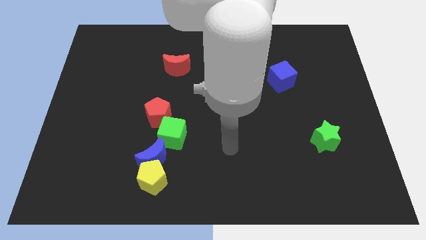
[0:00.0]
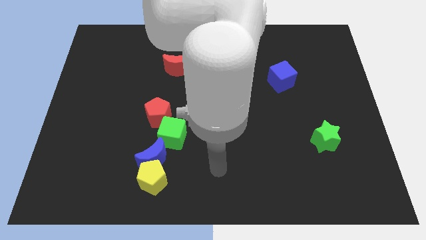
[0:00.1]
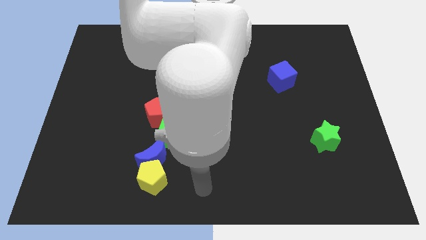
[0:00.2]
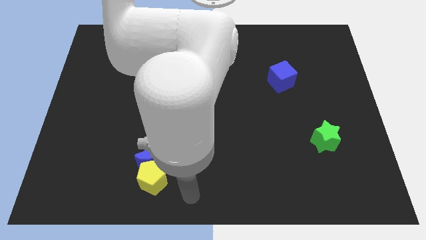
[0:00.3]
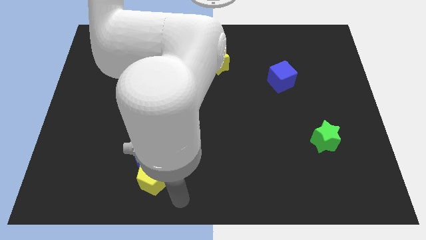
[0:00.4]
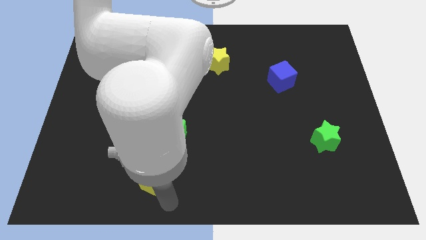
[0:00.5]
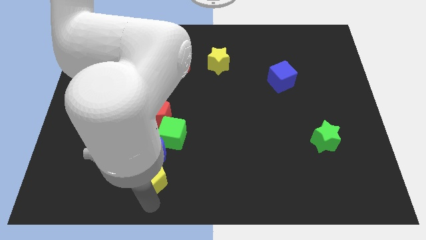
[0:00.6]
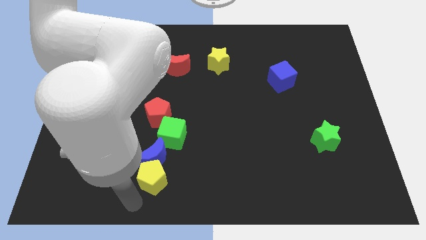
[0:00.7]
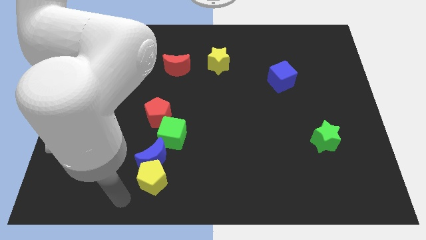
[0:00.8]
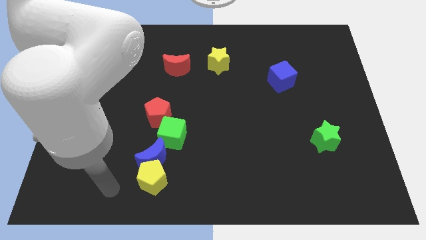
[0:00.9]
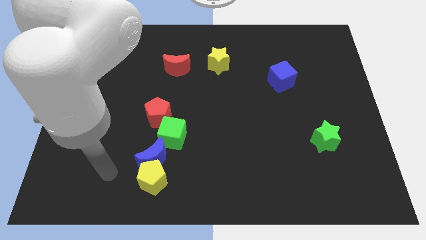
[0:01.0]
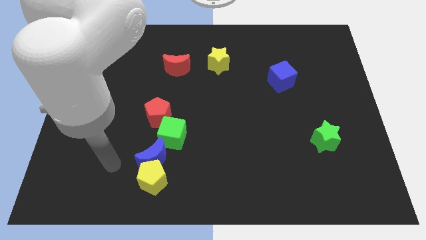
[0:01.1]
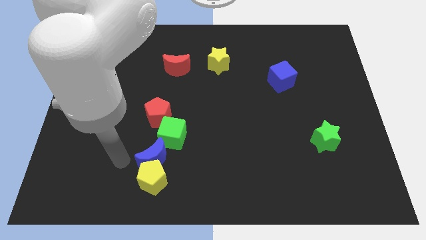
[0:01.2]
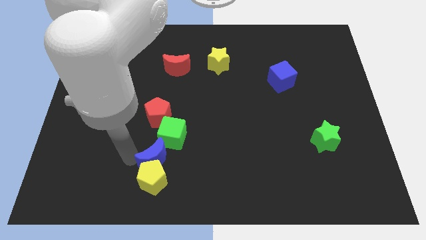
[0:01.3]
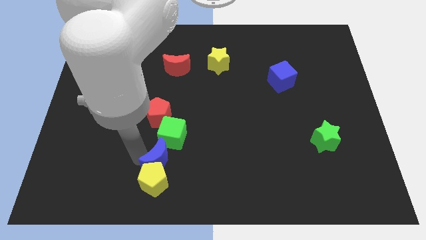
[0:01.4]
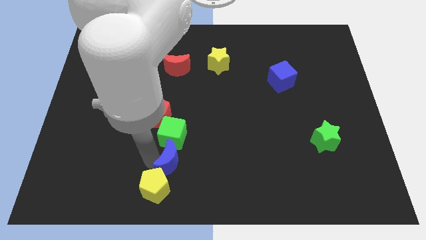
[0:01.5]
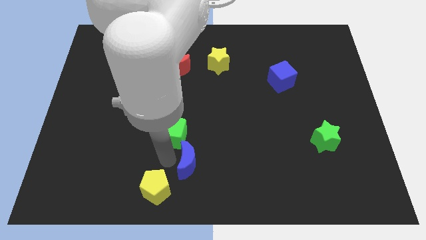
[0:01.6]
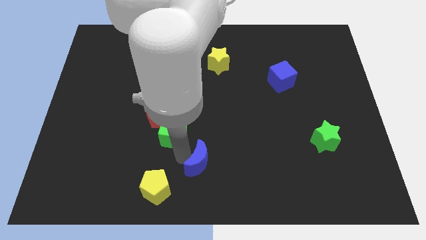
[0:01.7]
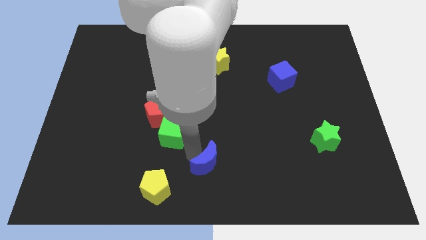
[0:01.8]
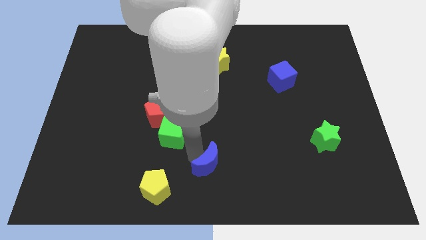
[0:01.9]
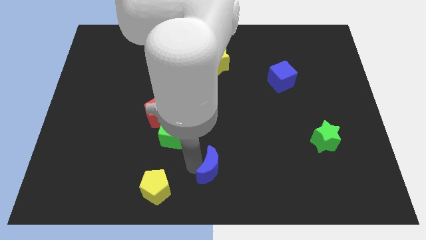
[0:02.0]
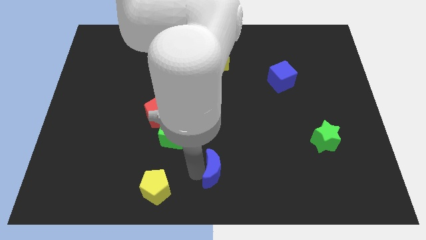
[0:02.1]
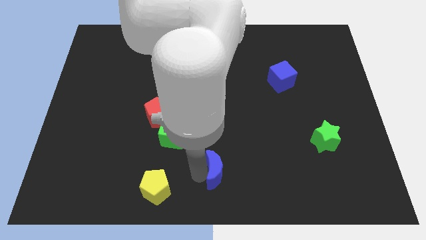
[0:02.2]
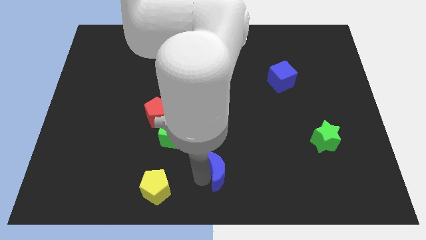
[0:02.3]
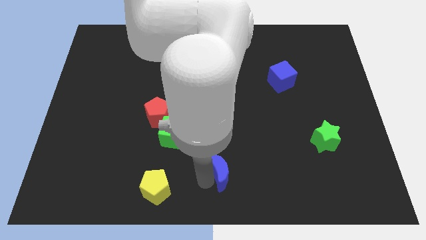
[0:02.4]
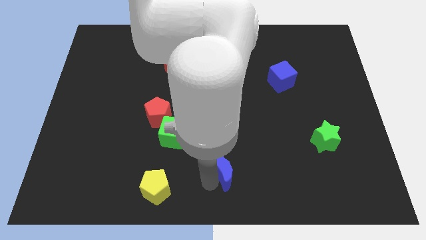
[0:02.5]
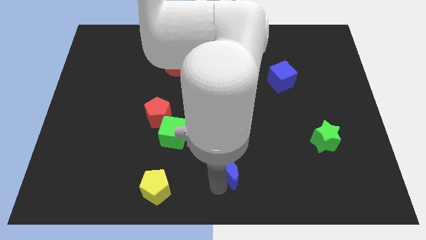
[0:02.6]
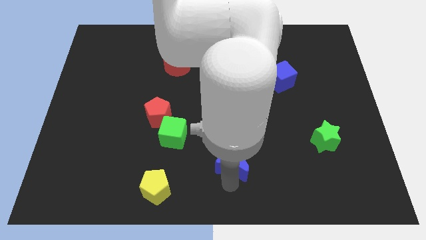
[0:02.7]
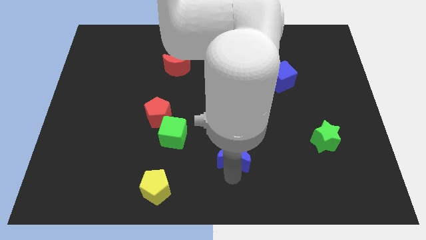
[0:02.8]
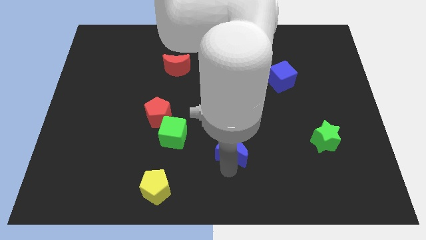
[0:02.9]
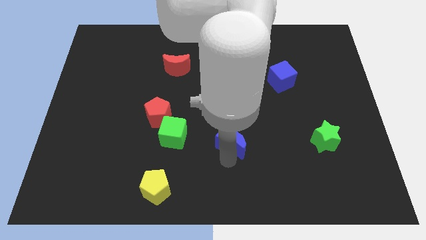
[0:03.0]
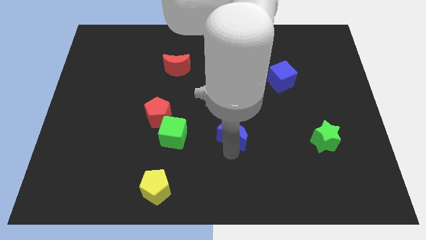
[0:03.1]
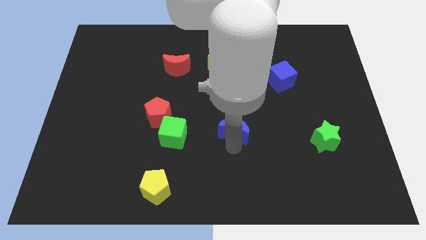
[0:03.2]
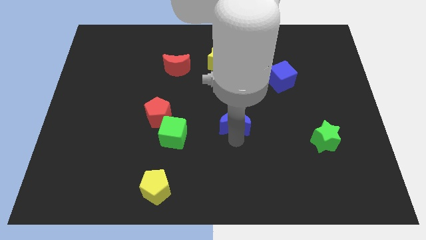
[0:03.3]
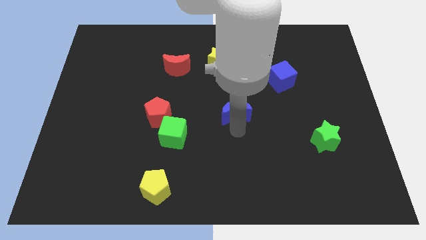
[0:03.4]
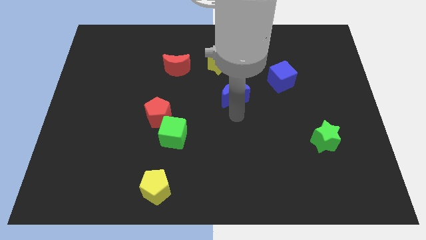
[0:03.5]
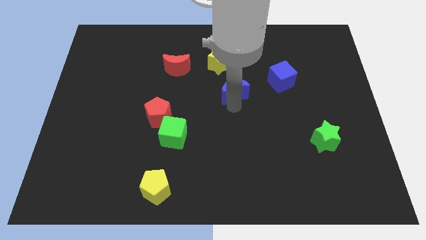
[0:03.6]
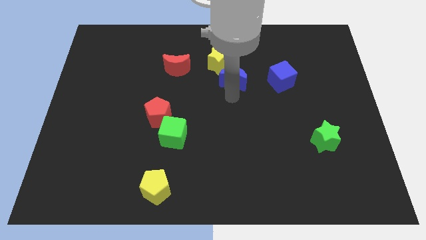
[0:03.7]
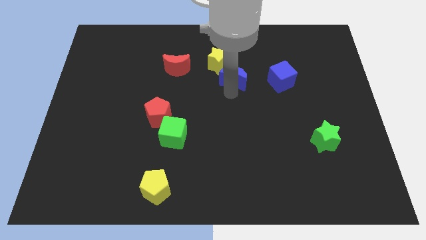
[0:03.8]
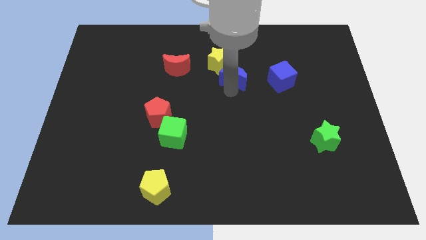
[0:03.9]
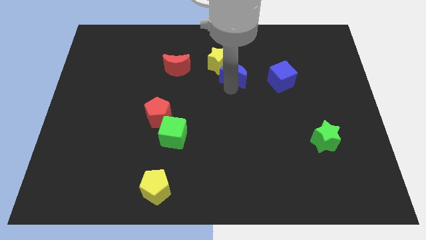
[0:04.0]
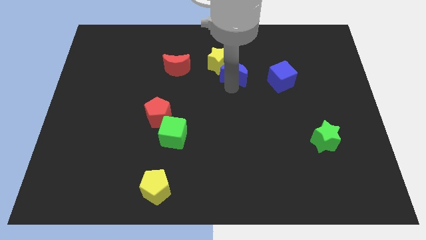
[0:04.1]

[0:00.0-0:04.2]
move the blue moon next to the yellow star

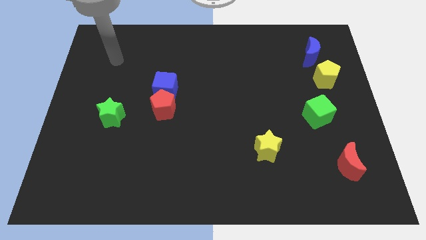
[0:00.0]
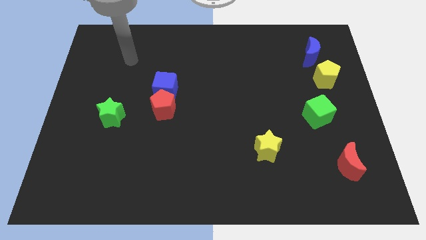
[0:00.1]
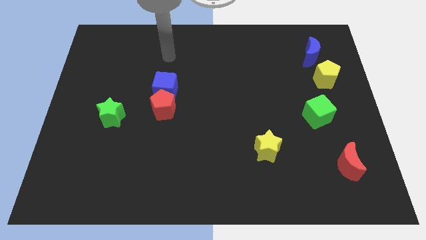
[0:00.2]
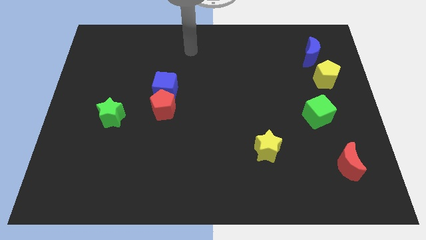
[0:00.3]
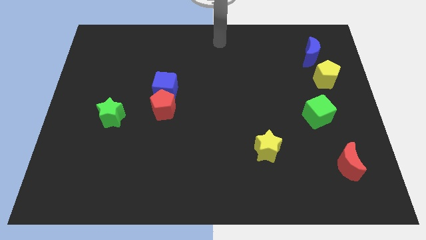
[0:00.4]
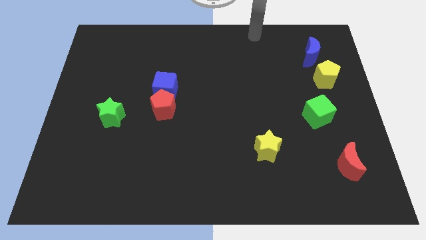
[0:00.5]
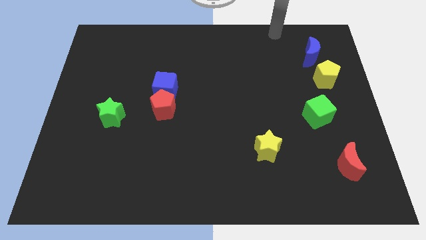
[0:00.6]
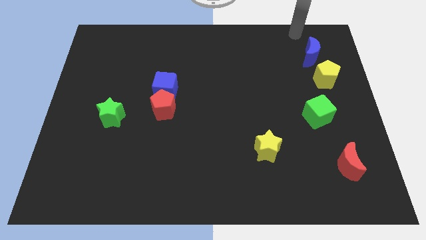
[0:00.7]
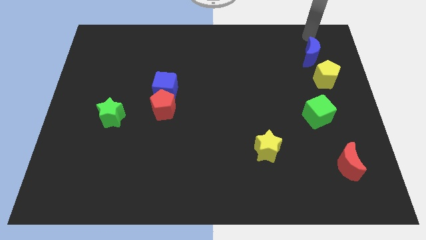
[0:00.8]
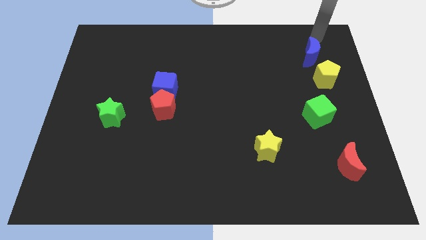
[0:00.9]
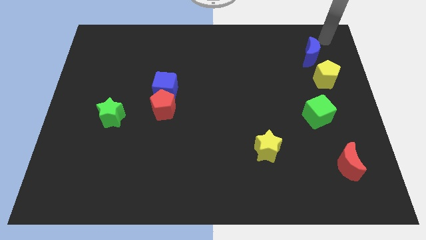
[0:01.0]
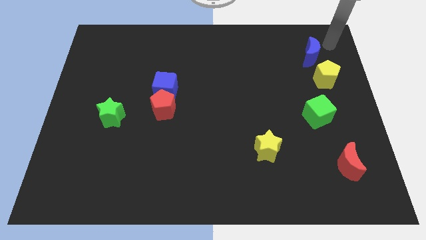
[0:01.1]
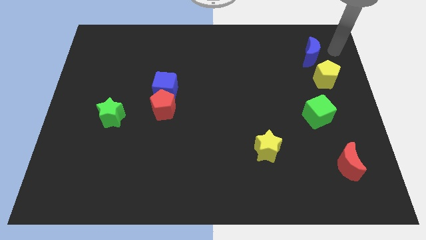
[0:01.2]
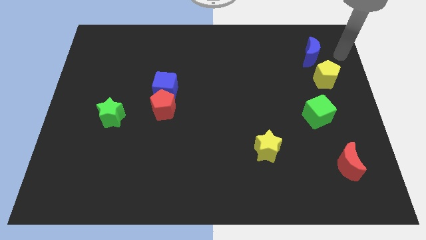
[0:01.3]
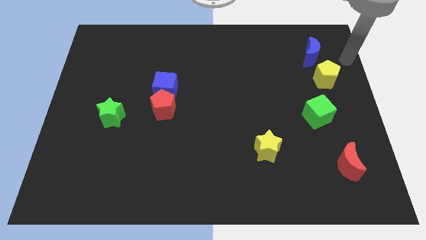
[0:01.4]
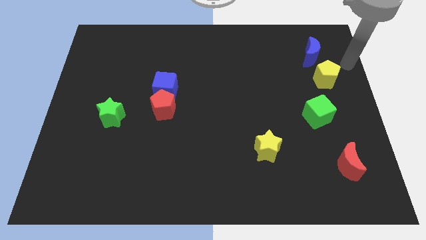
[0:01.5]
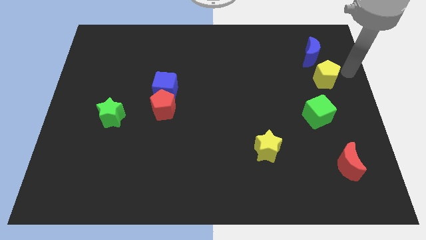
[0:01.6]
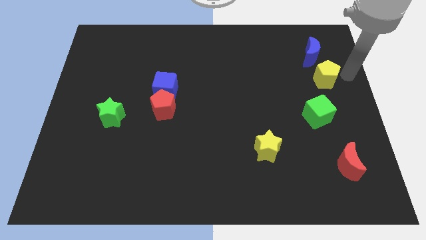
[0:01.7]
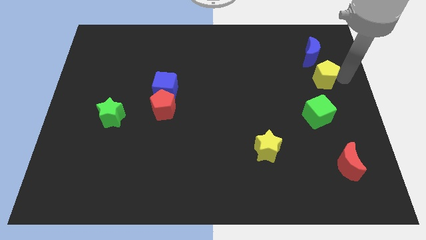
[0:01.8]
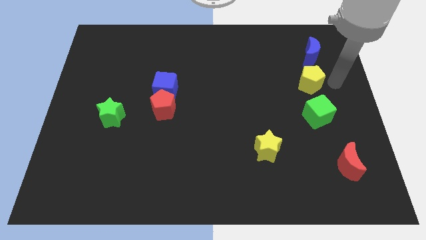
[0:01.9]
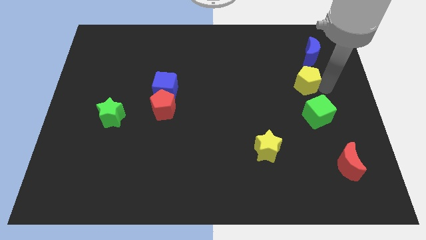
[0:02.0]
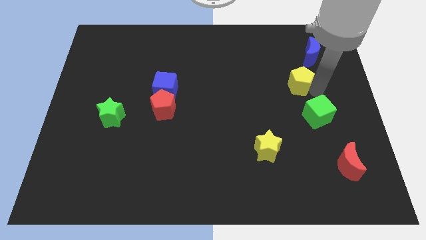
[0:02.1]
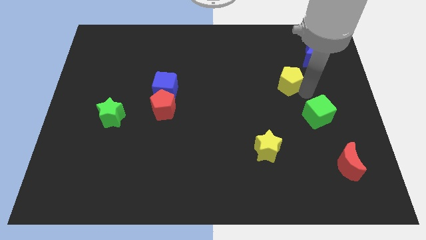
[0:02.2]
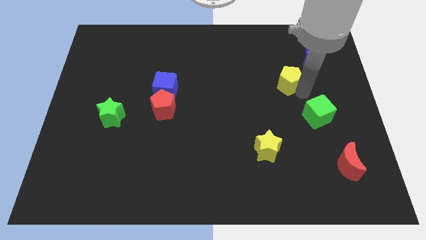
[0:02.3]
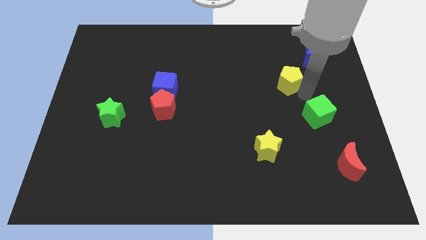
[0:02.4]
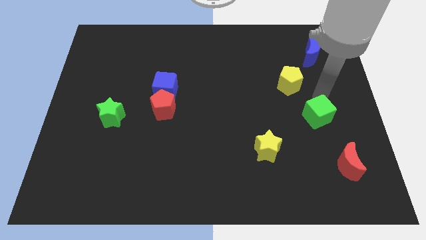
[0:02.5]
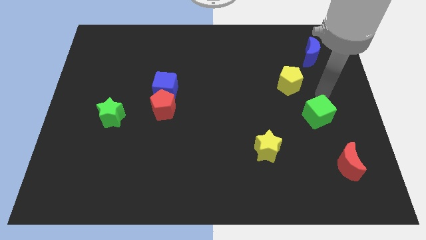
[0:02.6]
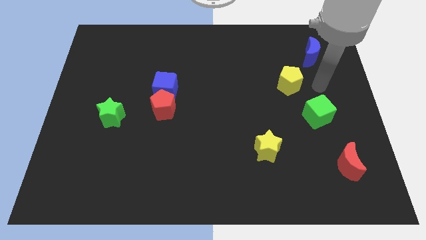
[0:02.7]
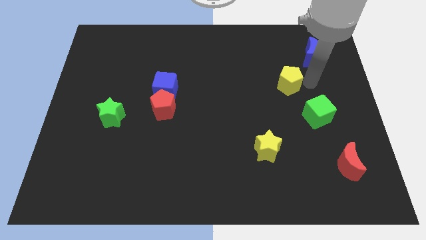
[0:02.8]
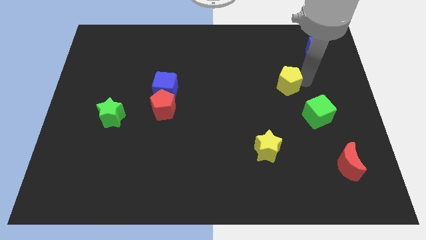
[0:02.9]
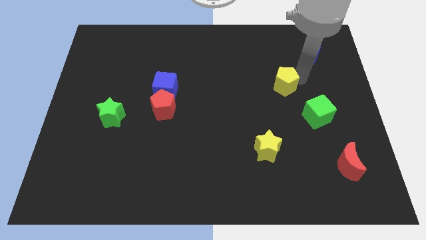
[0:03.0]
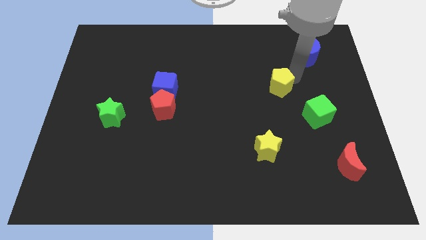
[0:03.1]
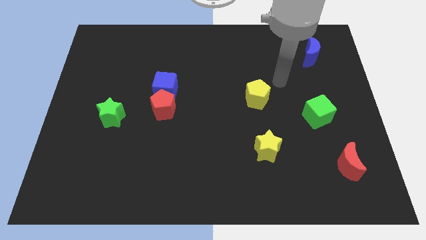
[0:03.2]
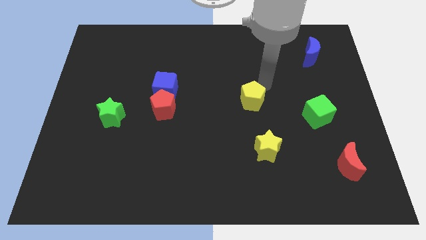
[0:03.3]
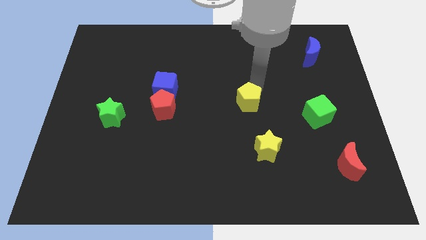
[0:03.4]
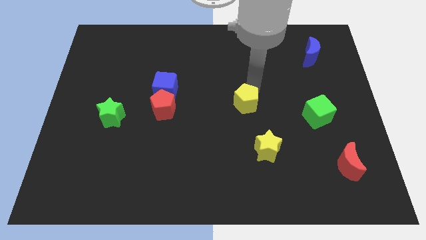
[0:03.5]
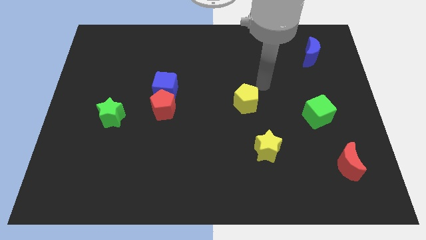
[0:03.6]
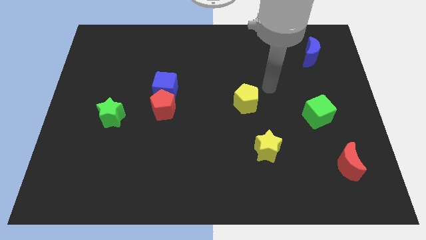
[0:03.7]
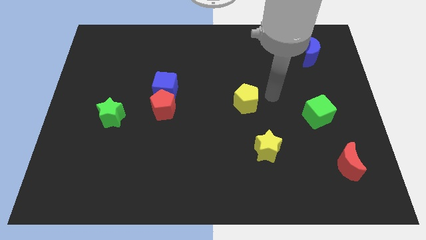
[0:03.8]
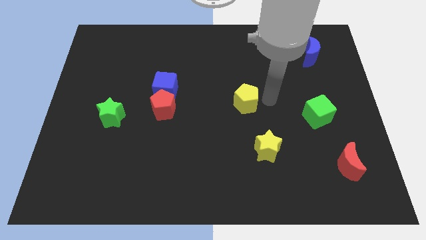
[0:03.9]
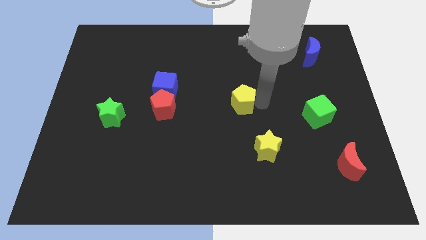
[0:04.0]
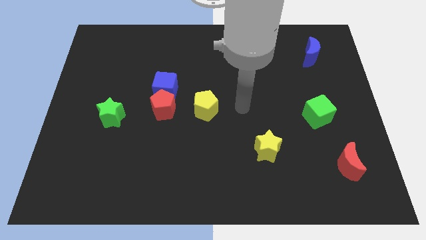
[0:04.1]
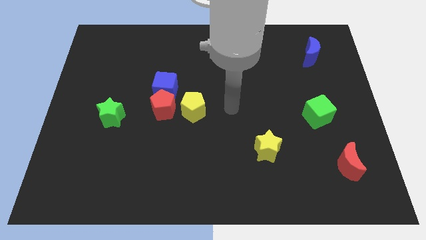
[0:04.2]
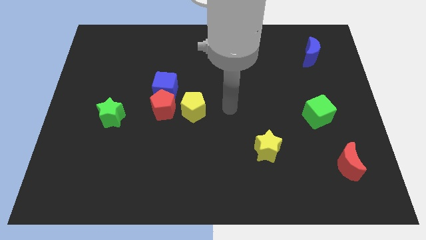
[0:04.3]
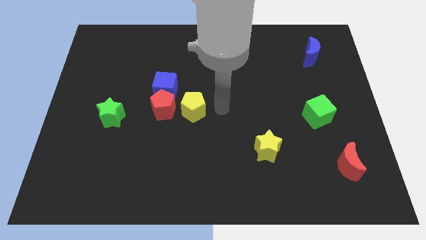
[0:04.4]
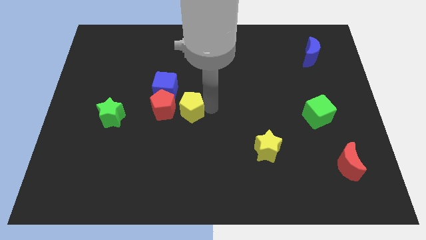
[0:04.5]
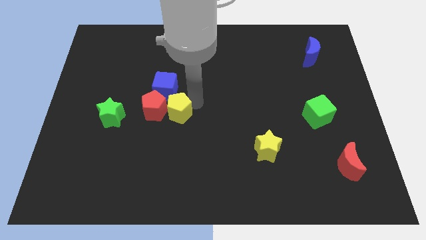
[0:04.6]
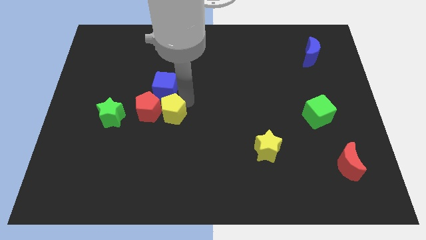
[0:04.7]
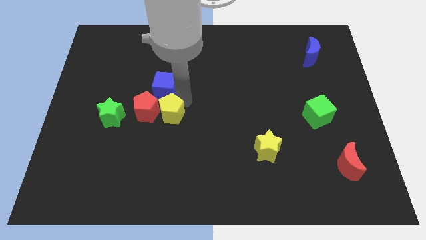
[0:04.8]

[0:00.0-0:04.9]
put the yellow pentagon next to the red pentagon
